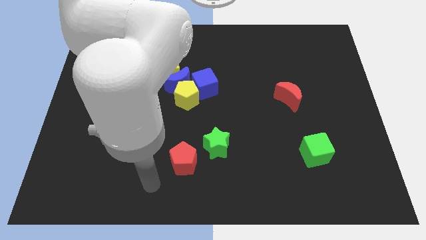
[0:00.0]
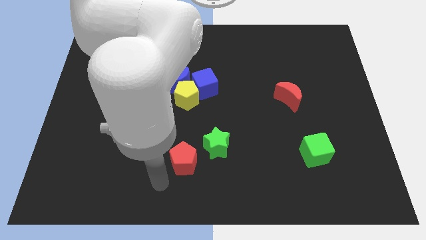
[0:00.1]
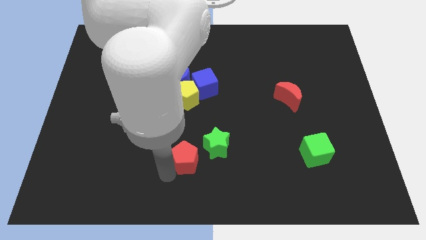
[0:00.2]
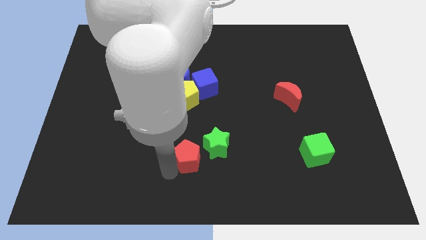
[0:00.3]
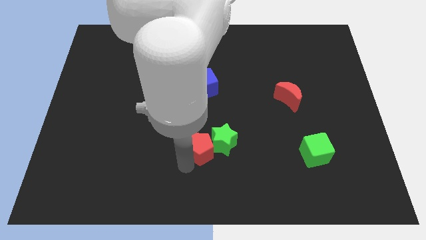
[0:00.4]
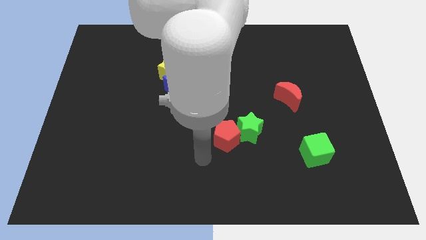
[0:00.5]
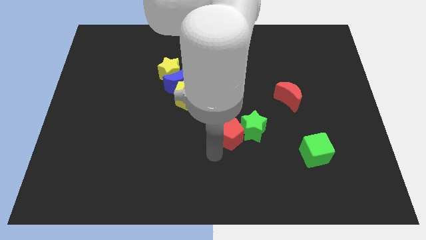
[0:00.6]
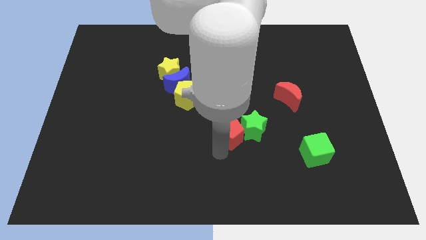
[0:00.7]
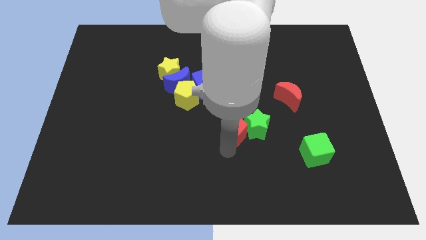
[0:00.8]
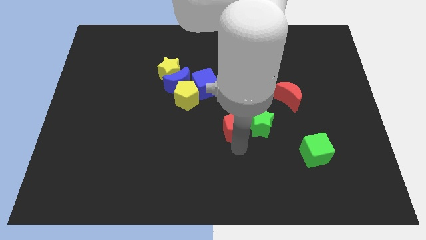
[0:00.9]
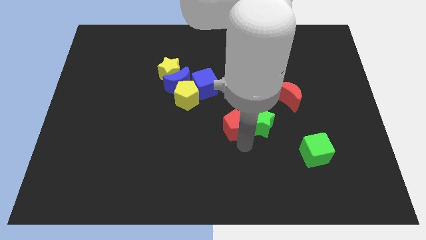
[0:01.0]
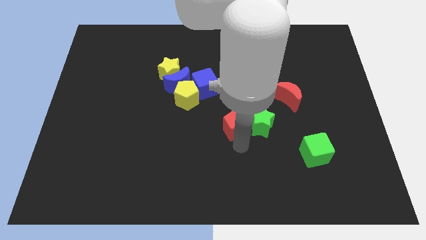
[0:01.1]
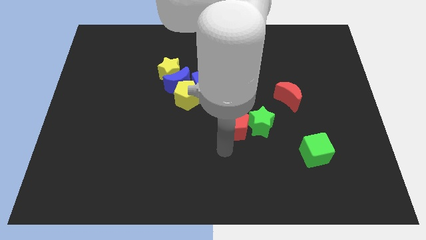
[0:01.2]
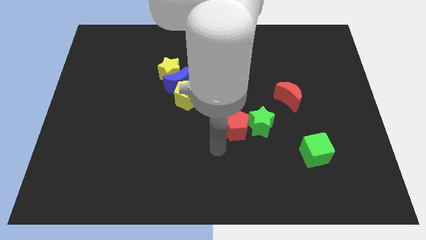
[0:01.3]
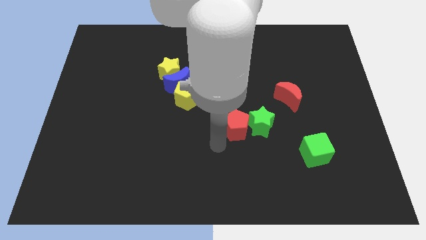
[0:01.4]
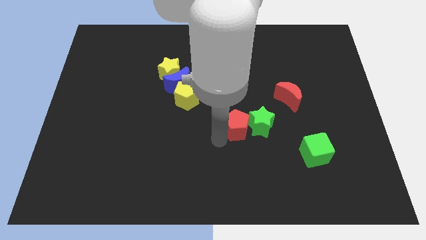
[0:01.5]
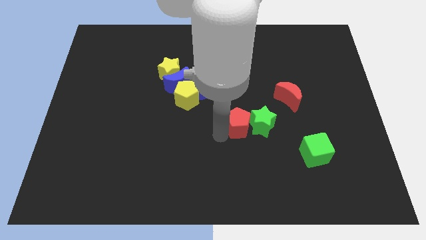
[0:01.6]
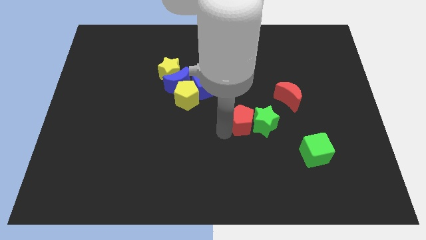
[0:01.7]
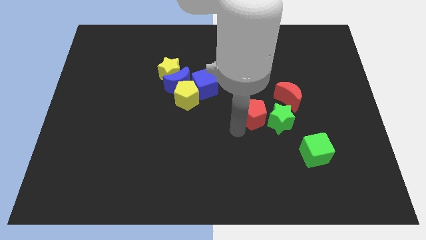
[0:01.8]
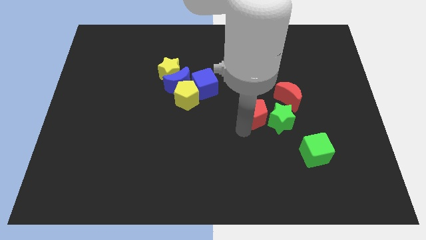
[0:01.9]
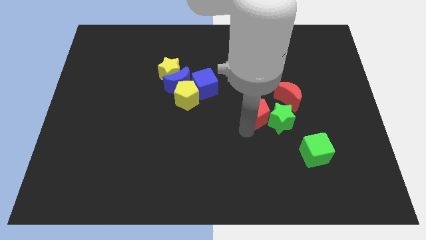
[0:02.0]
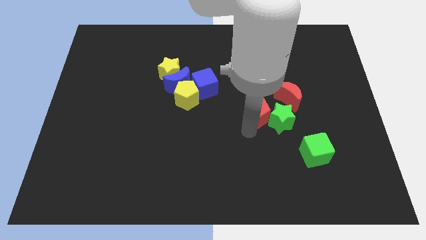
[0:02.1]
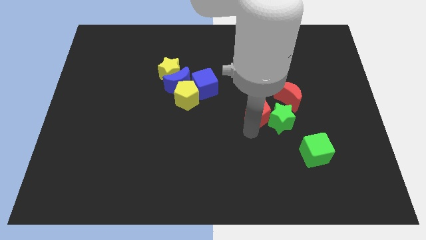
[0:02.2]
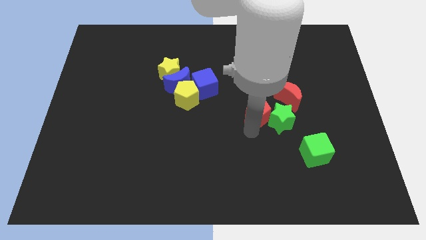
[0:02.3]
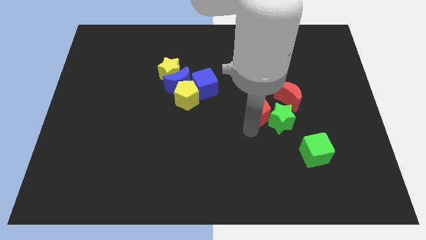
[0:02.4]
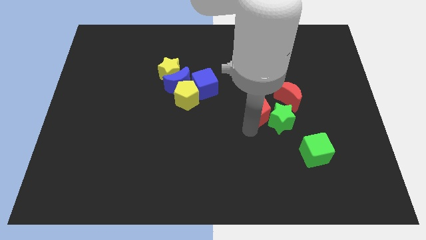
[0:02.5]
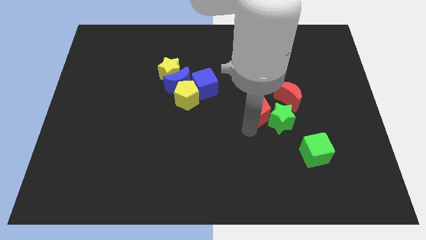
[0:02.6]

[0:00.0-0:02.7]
move red pentagon to the right side

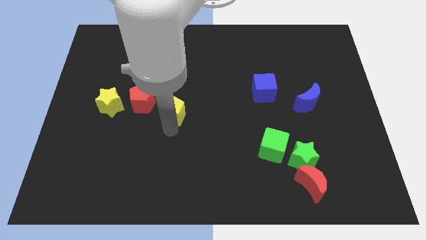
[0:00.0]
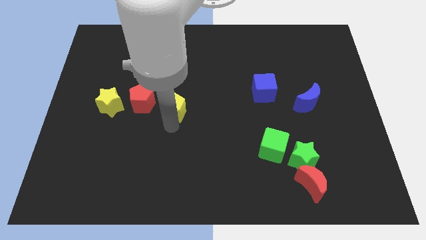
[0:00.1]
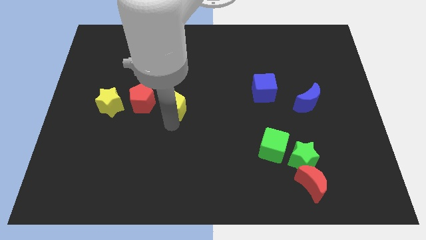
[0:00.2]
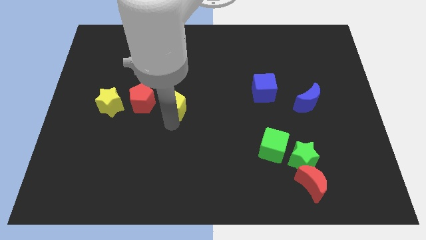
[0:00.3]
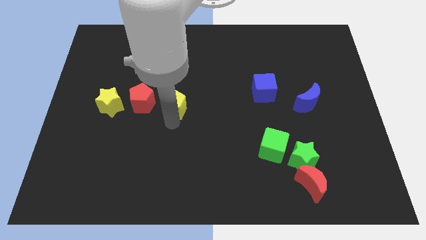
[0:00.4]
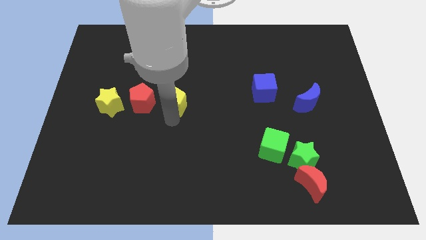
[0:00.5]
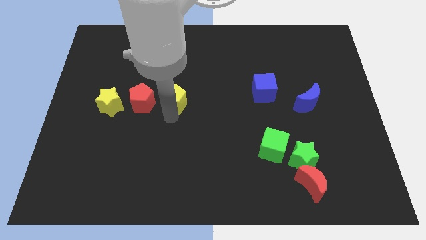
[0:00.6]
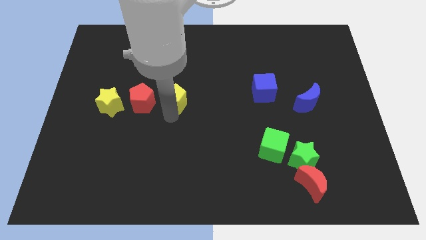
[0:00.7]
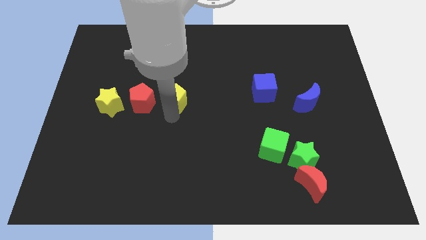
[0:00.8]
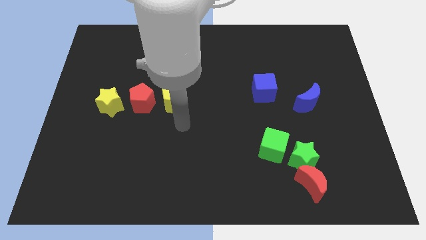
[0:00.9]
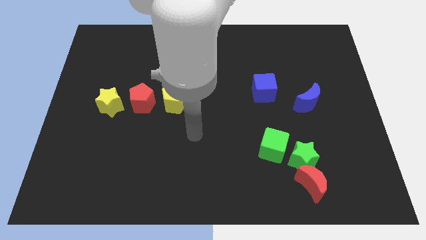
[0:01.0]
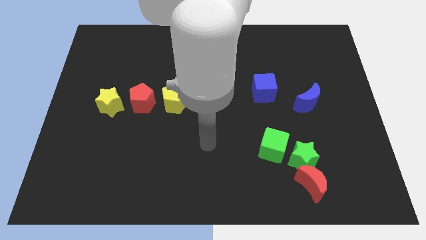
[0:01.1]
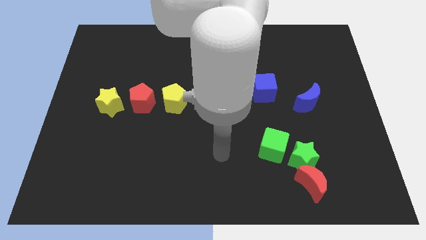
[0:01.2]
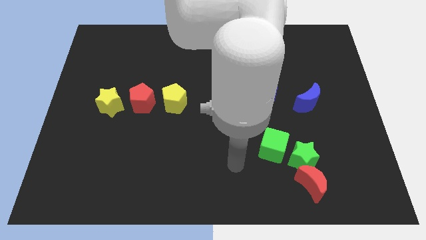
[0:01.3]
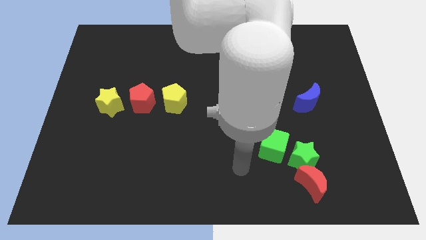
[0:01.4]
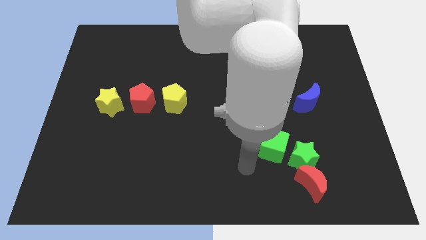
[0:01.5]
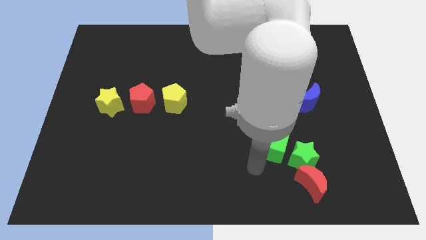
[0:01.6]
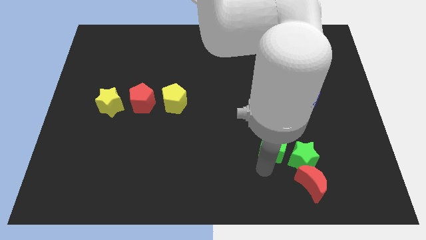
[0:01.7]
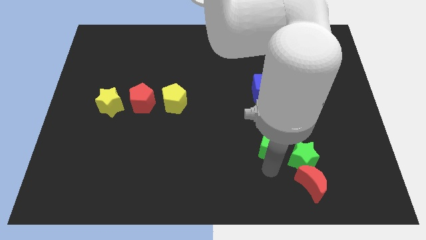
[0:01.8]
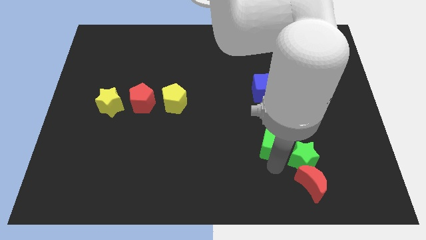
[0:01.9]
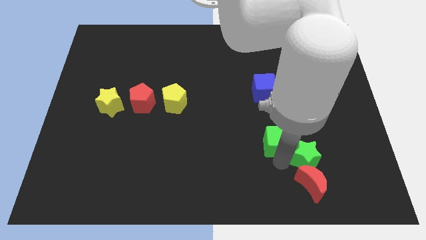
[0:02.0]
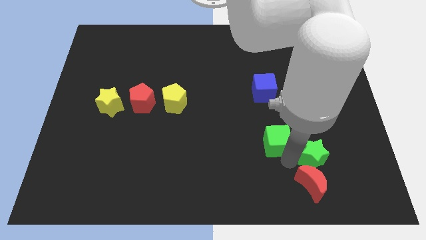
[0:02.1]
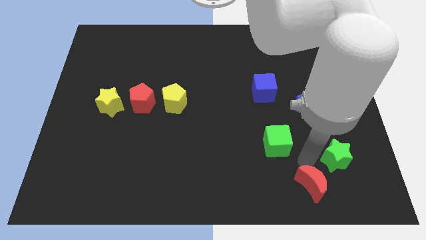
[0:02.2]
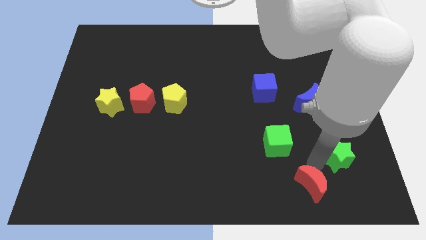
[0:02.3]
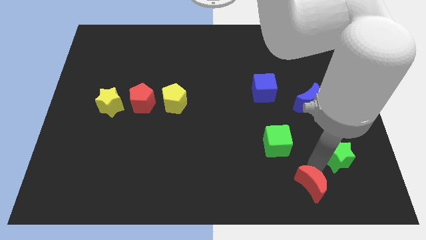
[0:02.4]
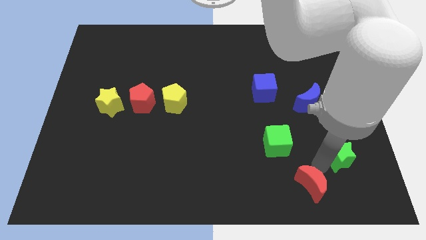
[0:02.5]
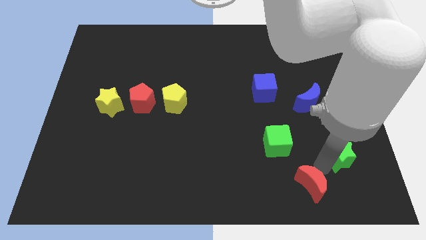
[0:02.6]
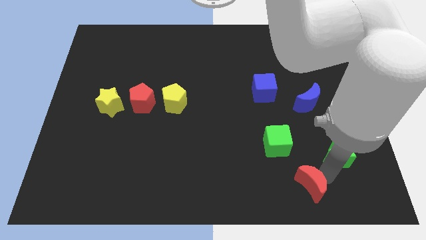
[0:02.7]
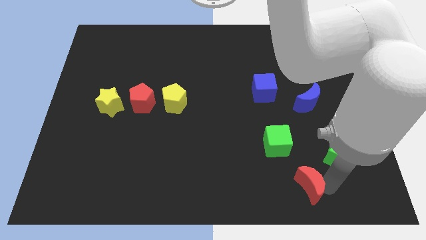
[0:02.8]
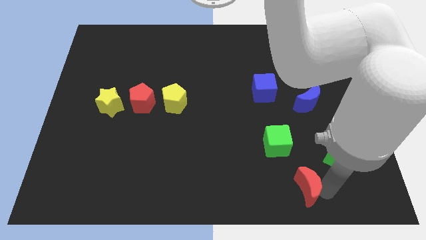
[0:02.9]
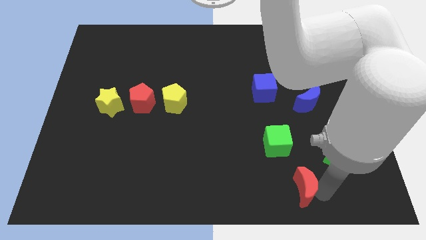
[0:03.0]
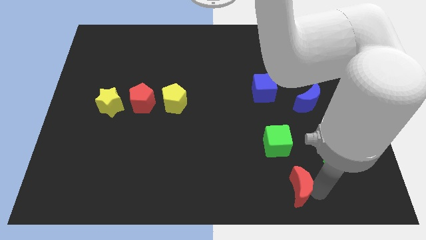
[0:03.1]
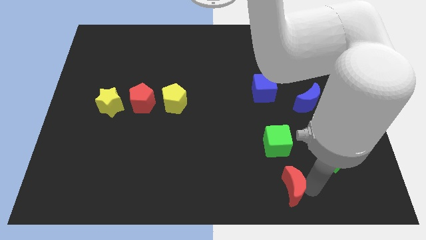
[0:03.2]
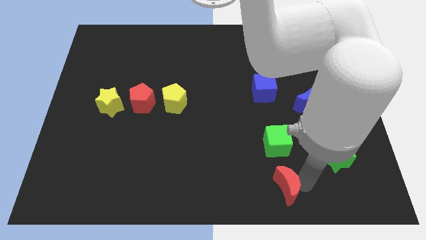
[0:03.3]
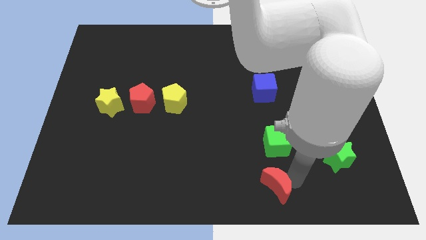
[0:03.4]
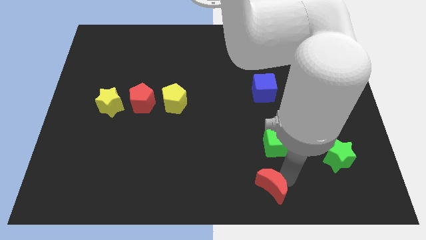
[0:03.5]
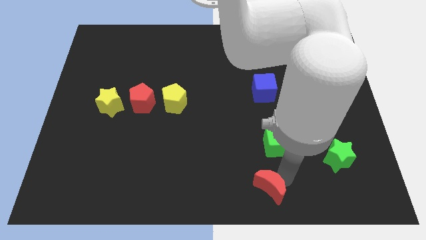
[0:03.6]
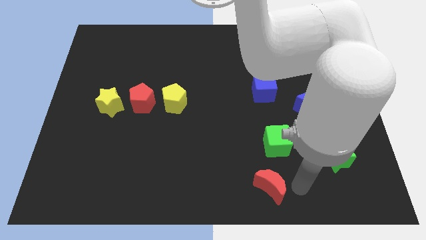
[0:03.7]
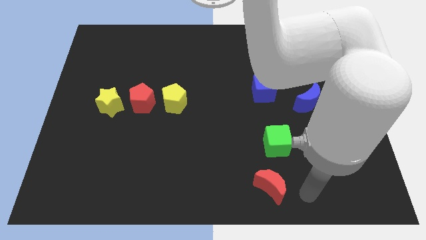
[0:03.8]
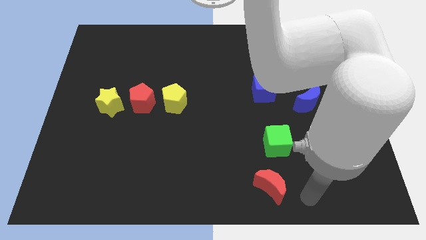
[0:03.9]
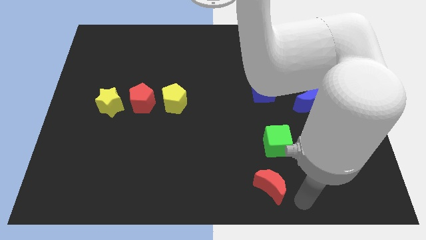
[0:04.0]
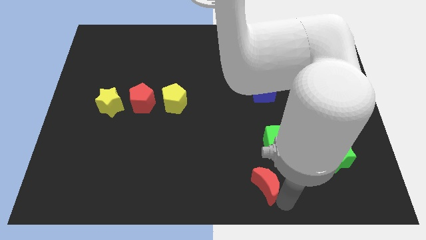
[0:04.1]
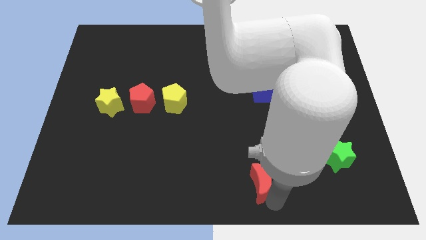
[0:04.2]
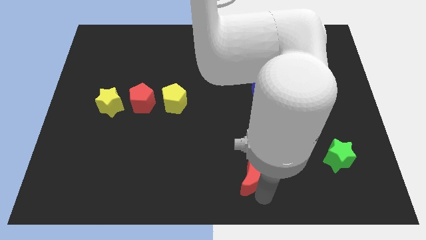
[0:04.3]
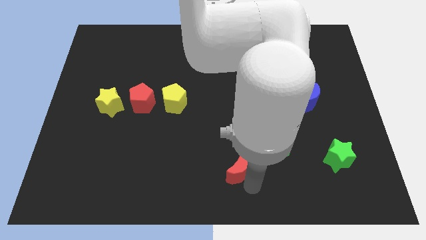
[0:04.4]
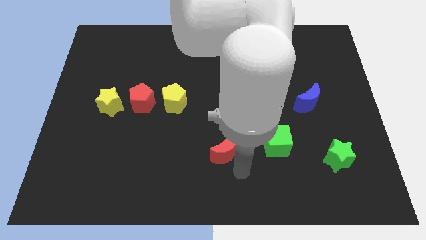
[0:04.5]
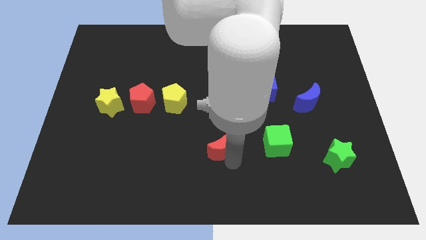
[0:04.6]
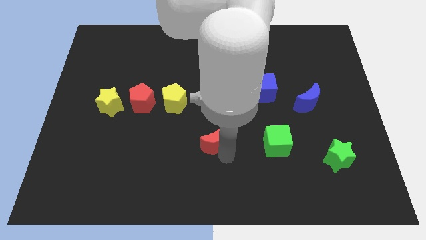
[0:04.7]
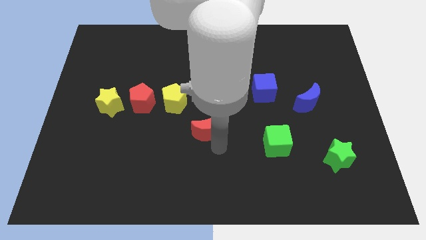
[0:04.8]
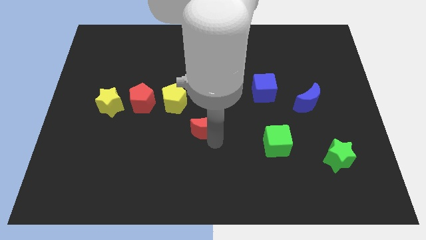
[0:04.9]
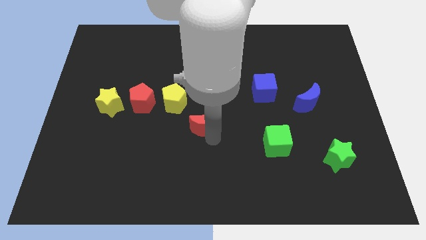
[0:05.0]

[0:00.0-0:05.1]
move the red moon close to right of the yellow pentagon

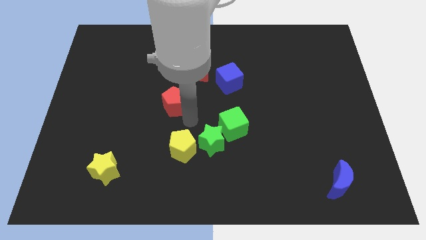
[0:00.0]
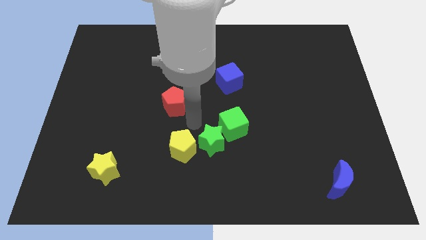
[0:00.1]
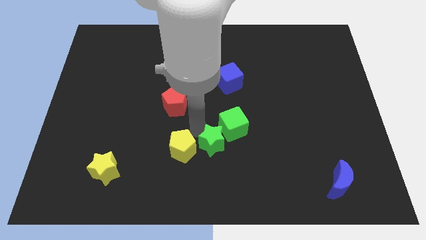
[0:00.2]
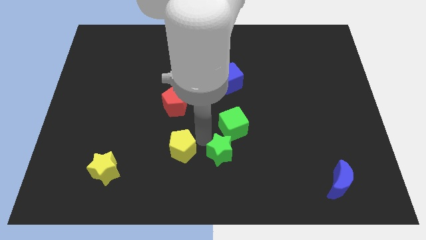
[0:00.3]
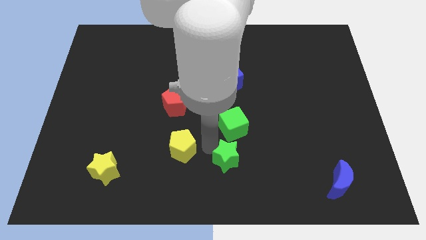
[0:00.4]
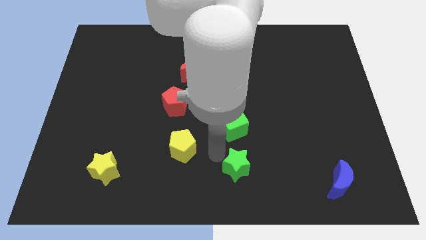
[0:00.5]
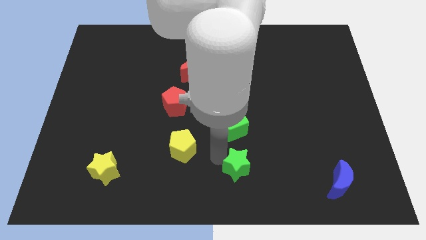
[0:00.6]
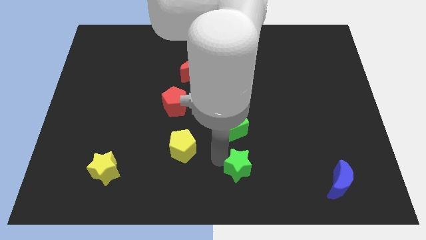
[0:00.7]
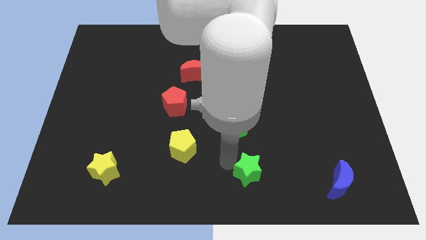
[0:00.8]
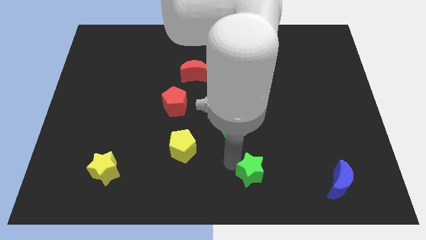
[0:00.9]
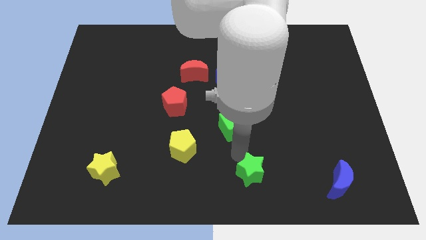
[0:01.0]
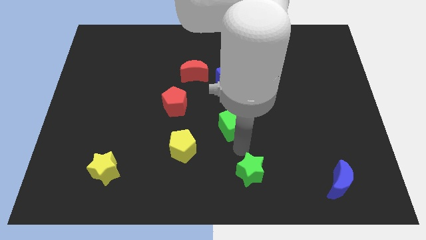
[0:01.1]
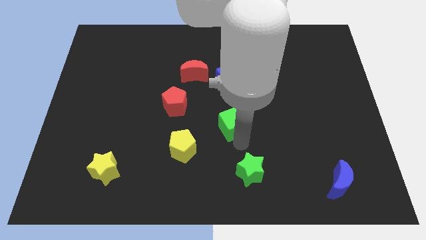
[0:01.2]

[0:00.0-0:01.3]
move the green star to the bottom right of the green cube
